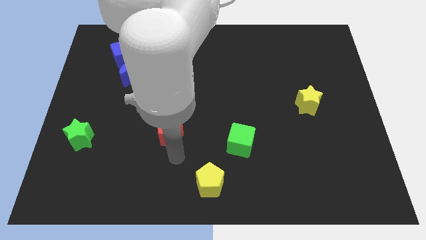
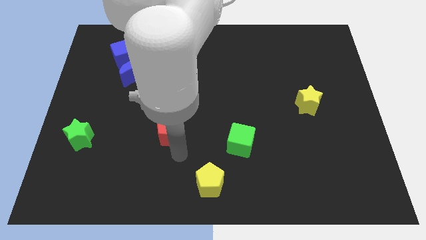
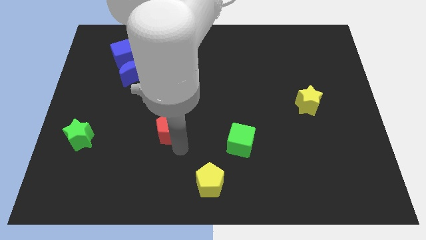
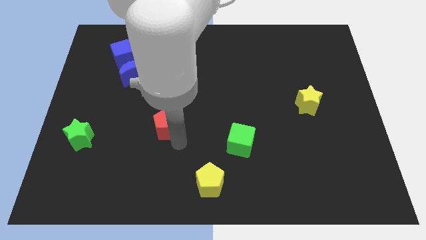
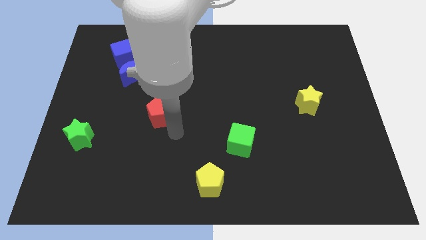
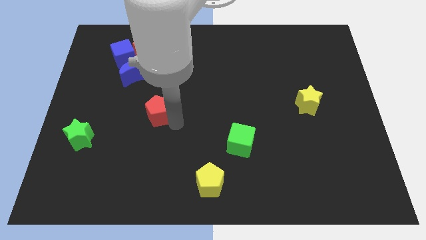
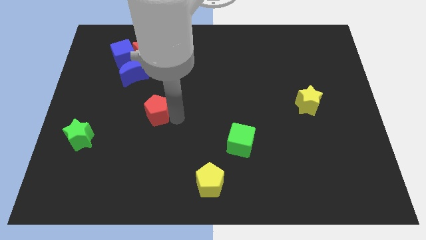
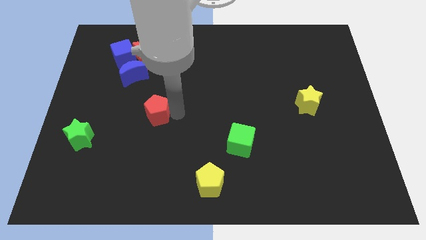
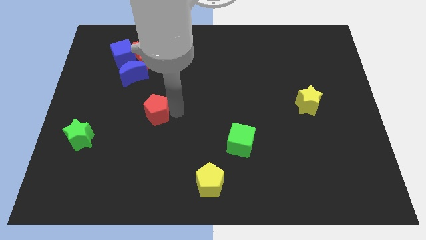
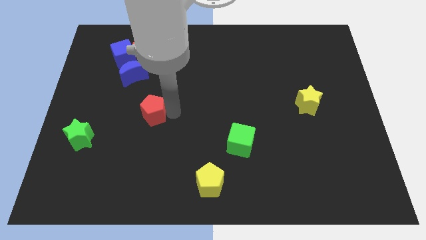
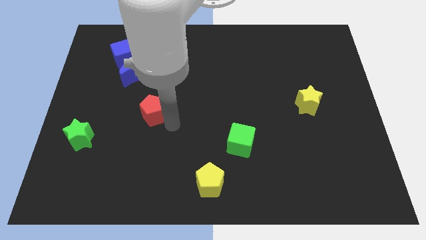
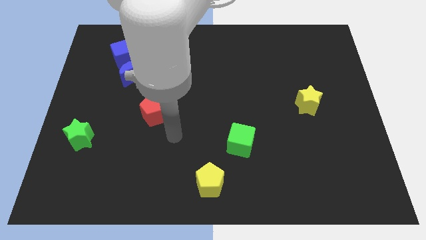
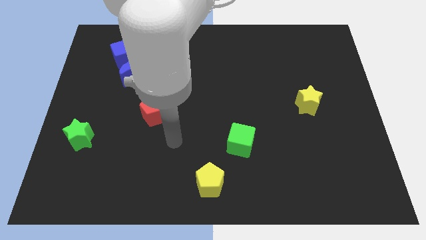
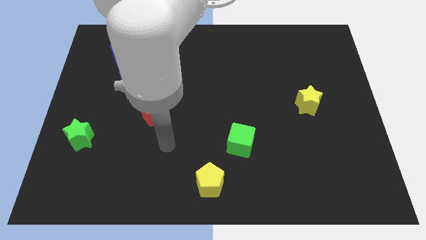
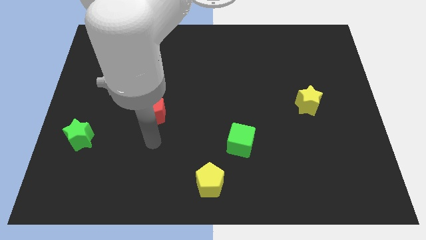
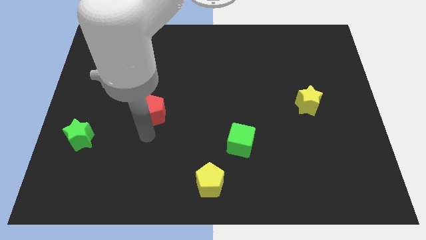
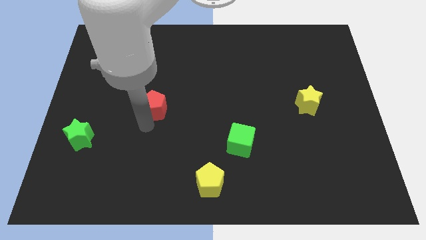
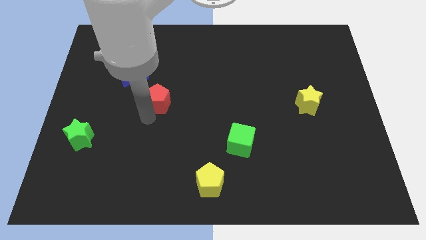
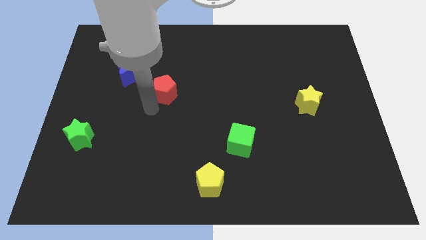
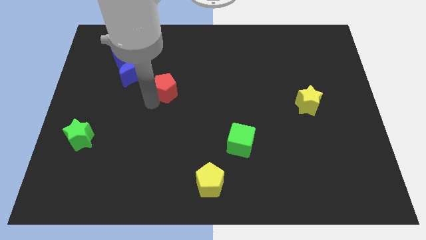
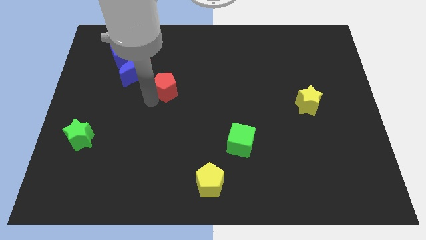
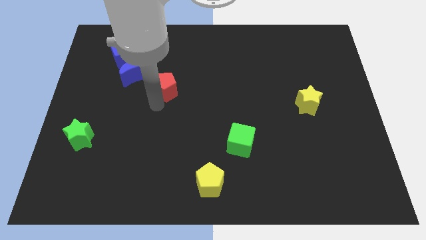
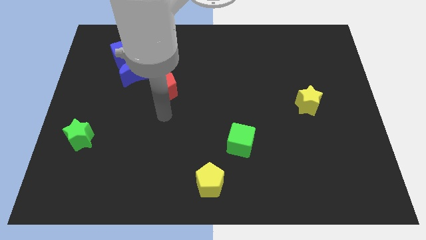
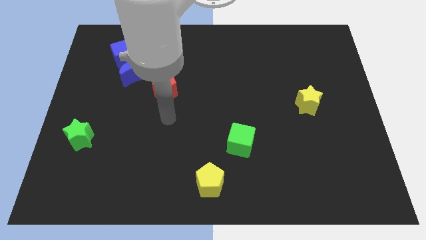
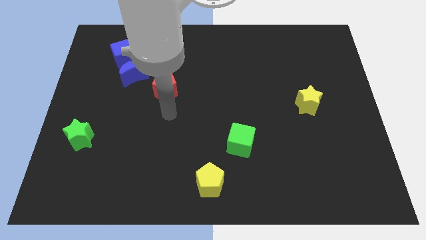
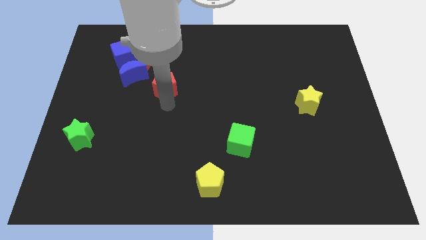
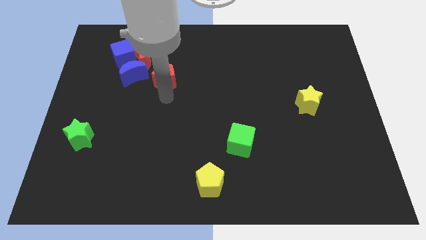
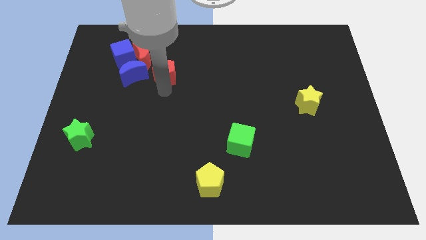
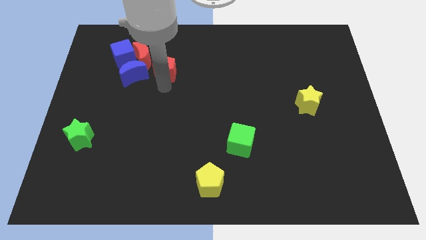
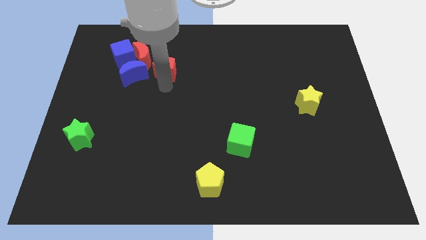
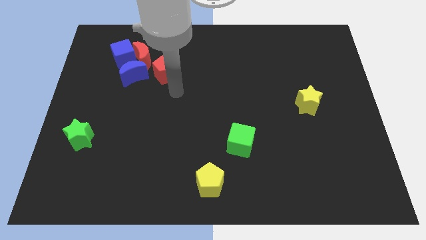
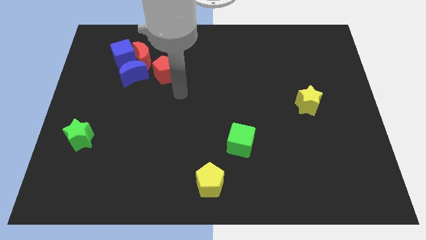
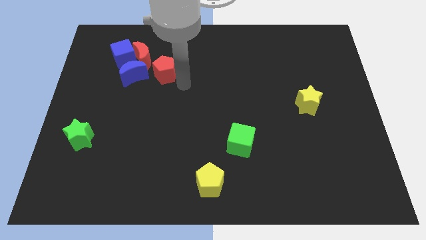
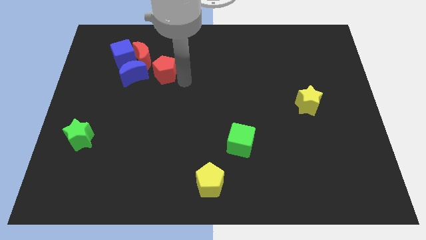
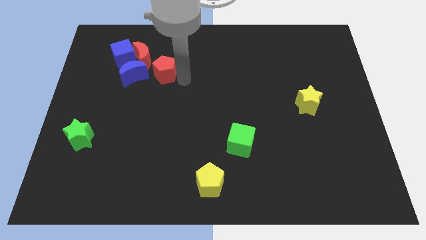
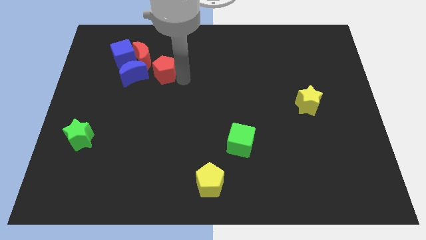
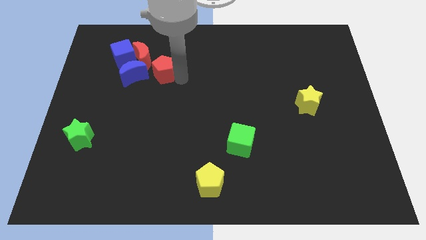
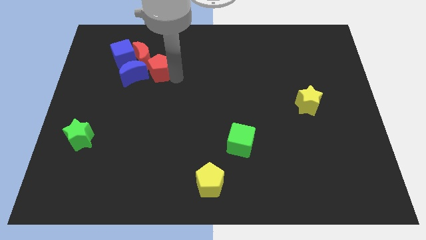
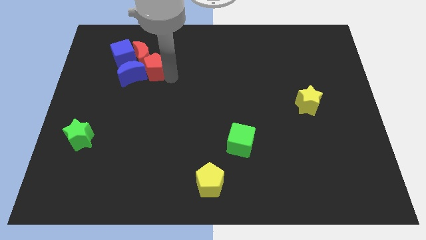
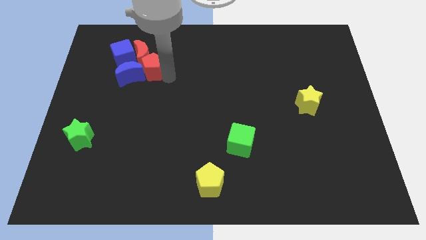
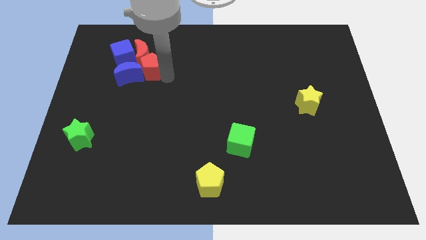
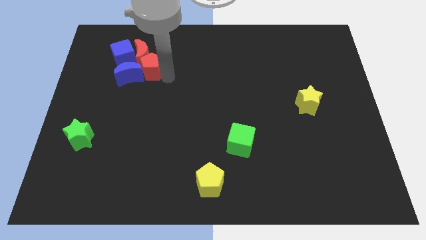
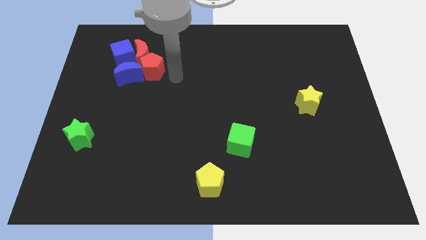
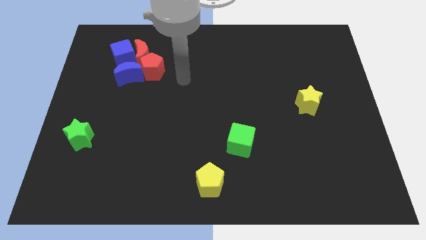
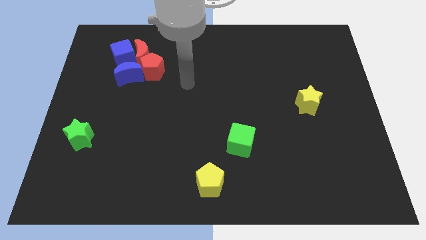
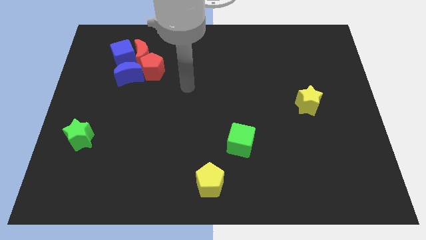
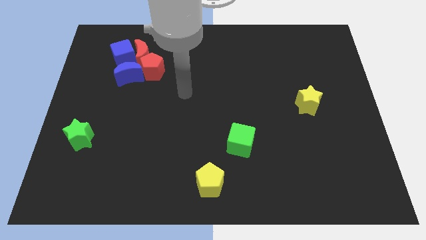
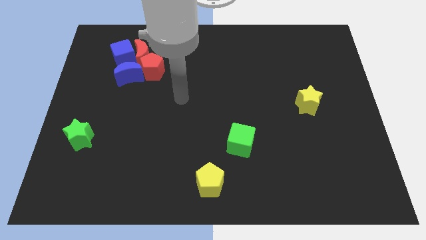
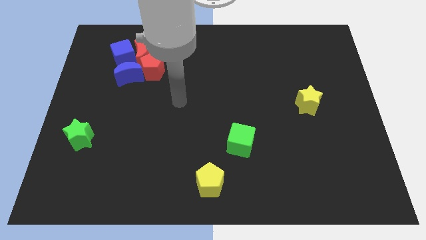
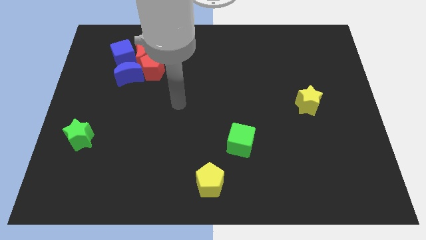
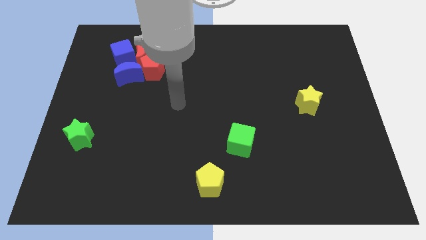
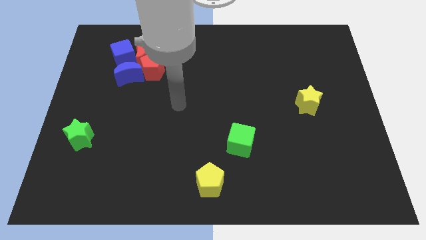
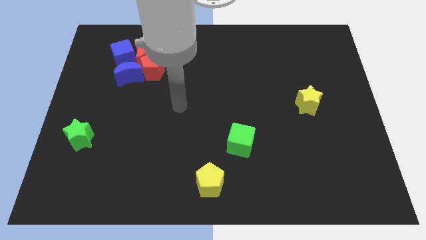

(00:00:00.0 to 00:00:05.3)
push the red pentagon in to the red crescent

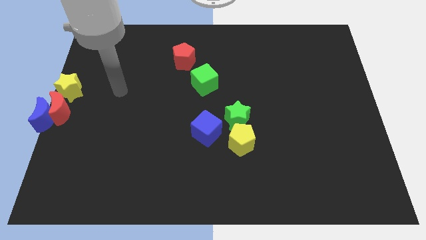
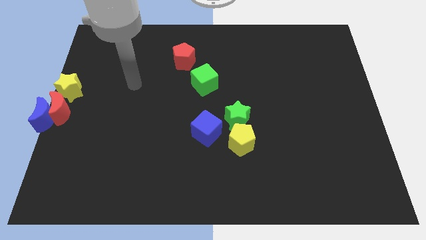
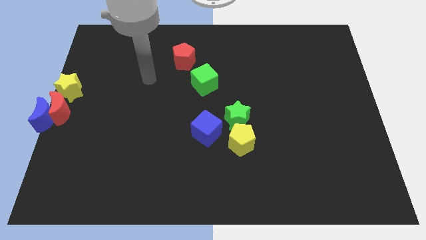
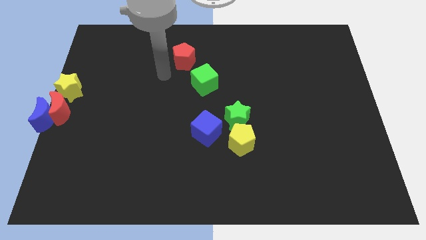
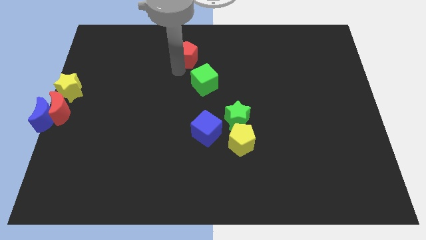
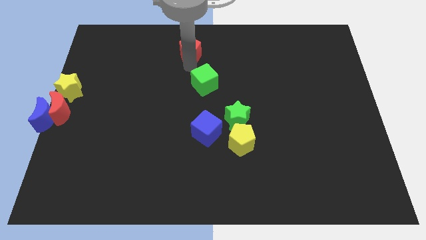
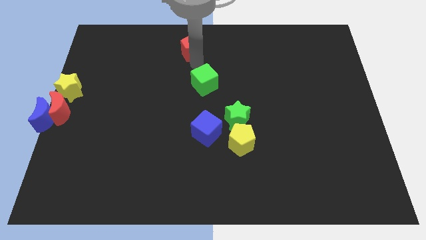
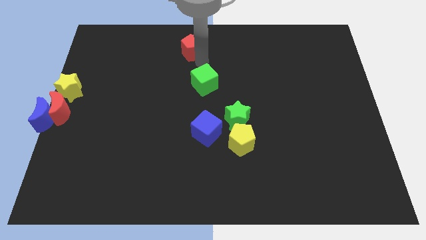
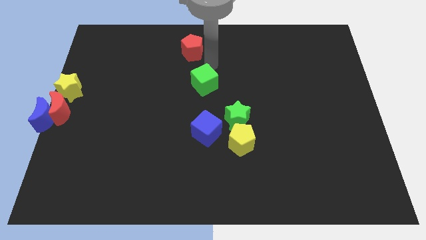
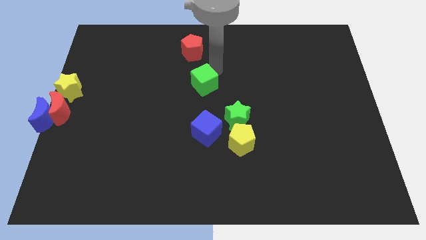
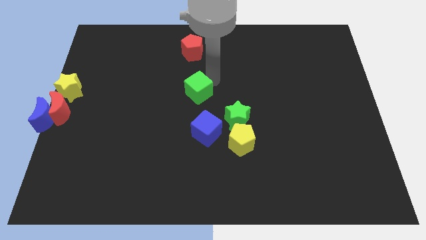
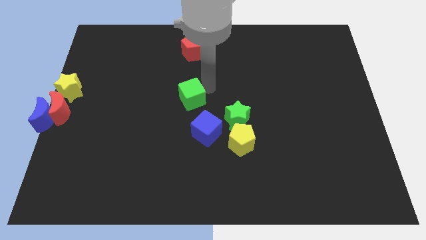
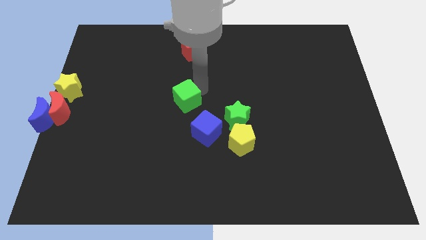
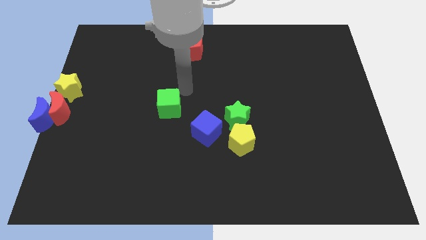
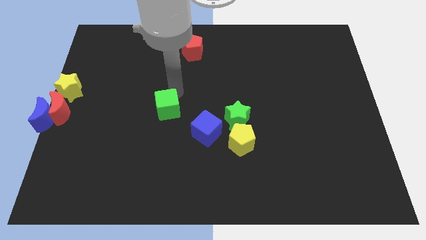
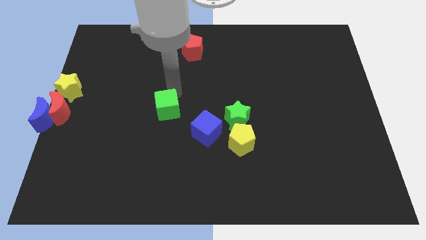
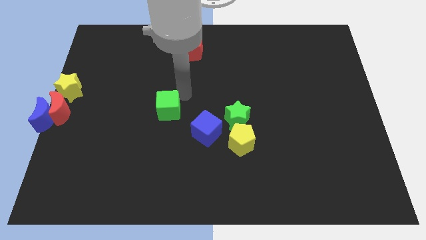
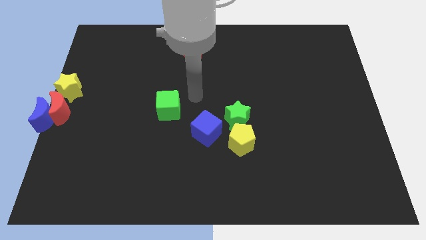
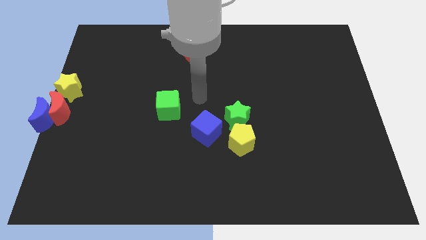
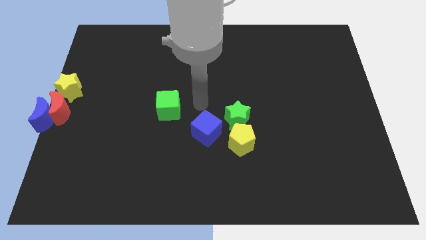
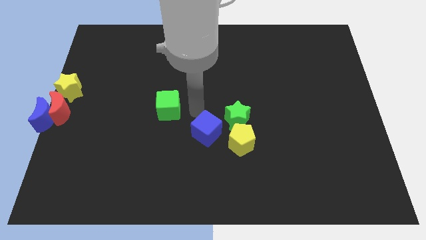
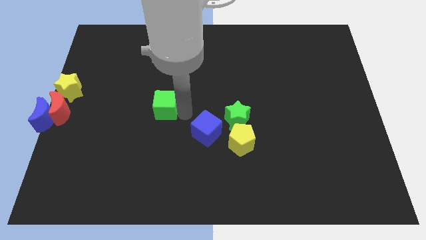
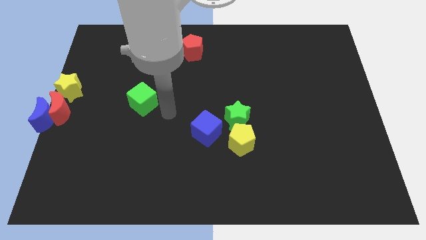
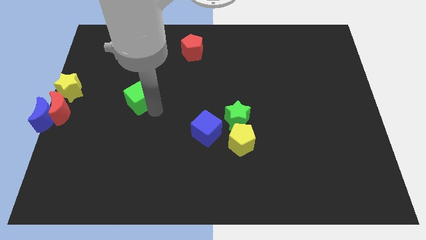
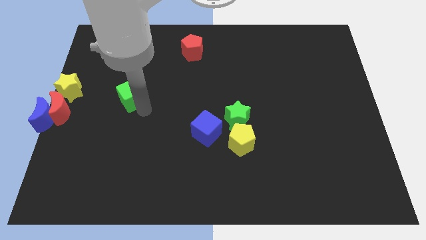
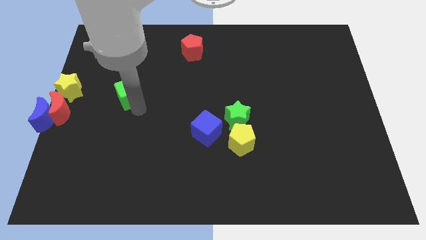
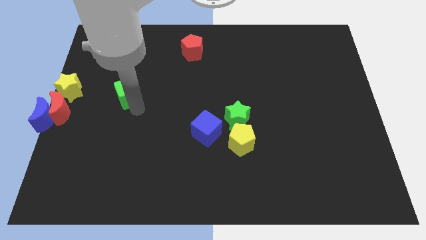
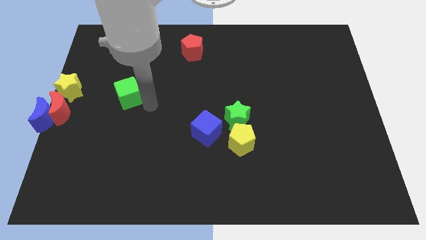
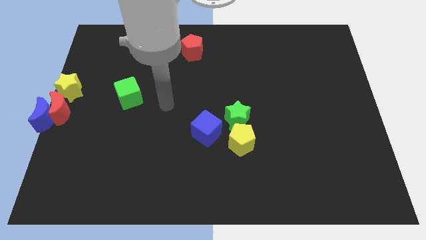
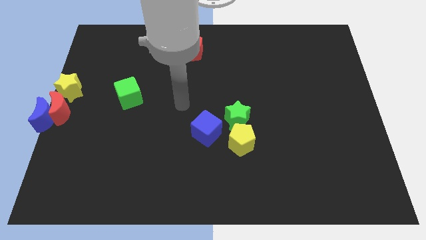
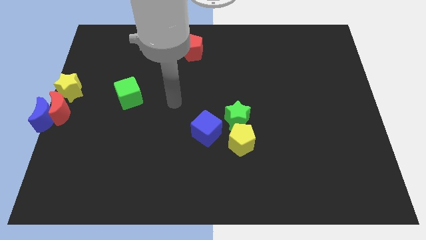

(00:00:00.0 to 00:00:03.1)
slide the green cube vertically to the right of the yellow star

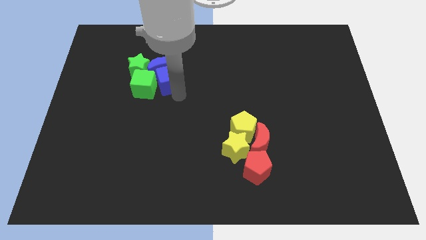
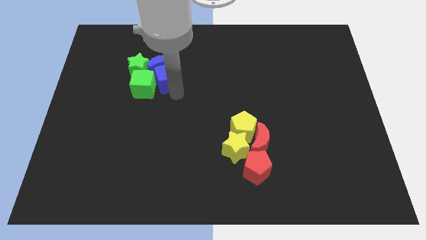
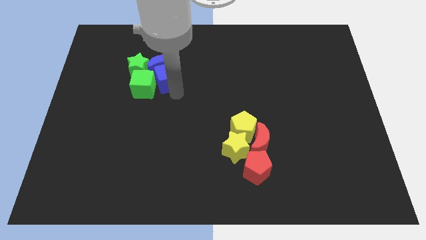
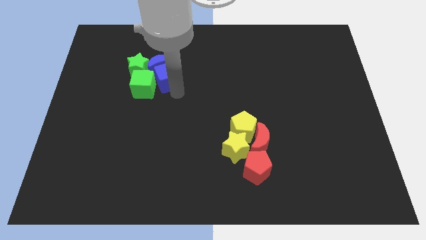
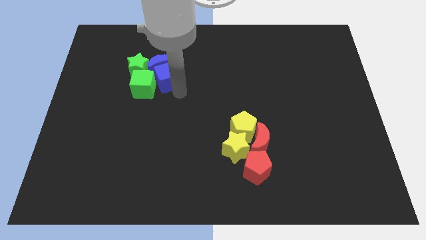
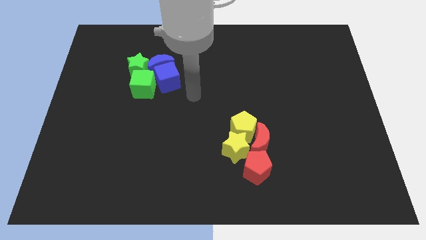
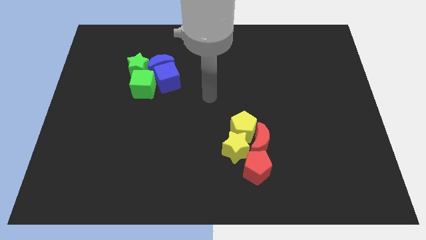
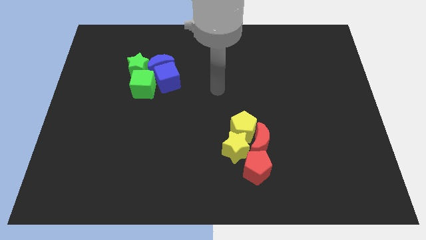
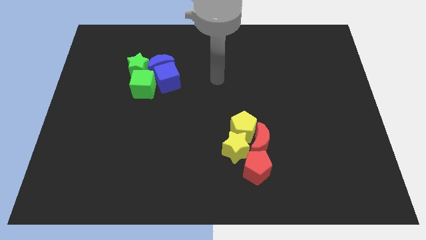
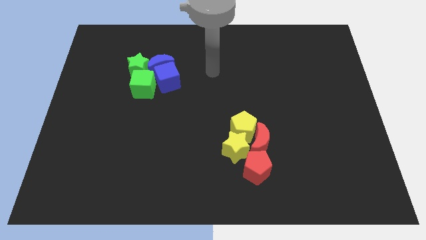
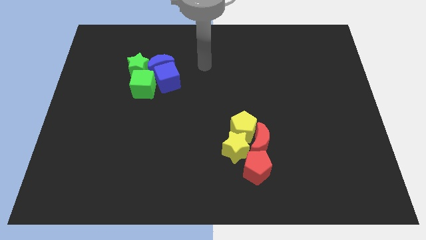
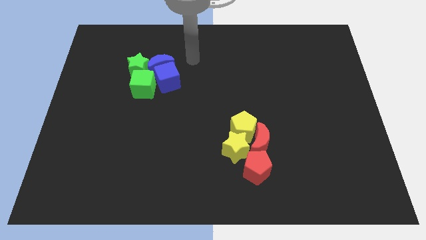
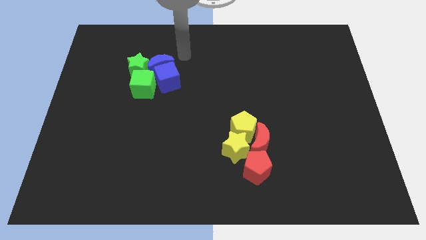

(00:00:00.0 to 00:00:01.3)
move your arm away from blue cube
